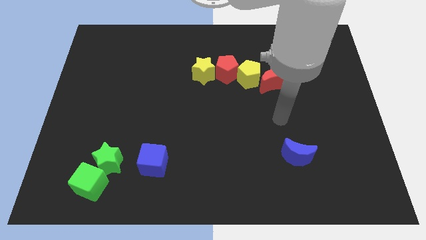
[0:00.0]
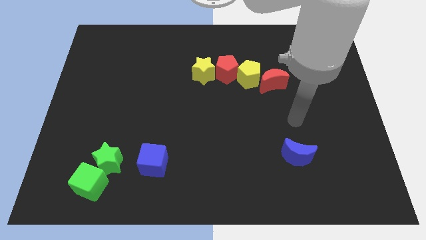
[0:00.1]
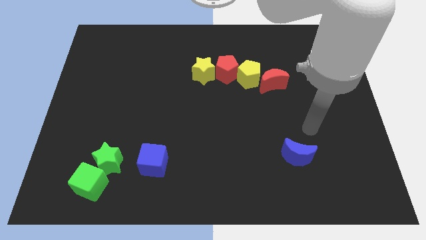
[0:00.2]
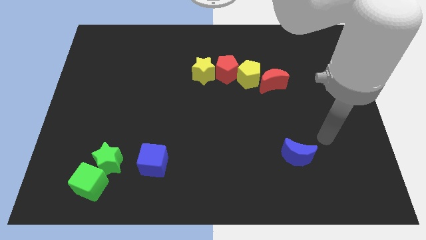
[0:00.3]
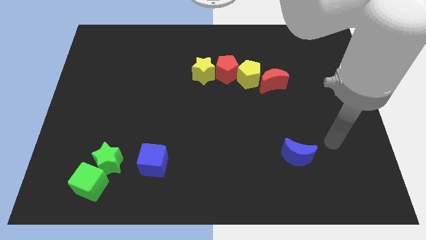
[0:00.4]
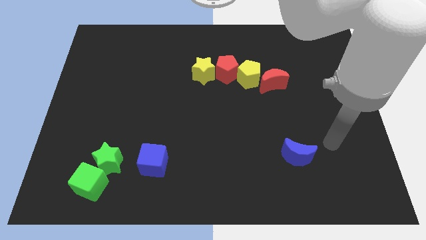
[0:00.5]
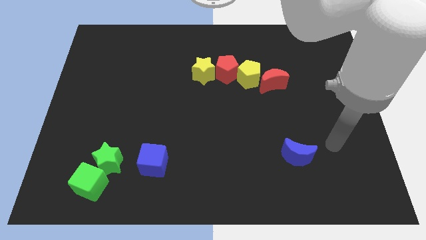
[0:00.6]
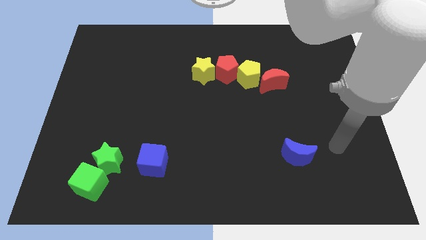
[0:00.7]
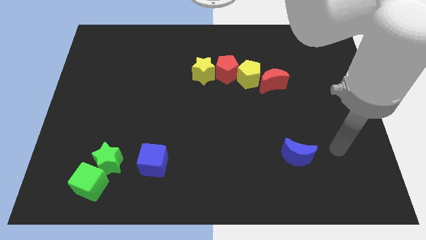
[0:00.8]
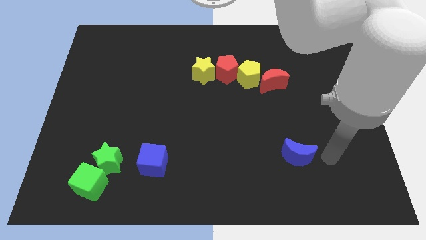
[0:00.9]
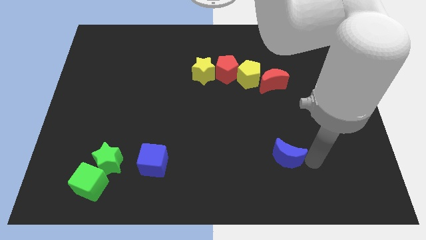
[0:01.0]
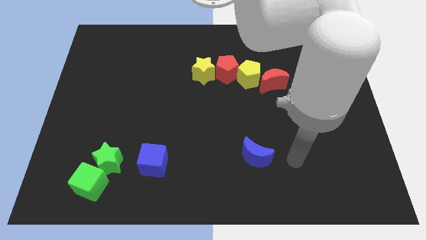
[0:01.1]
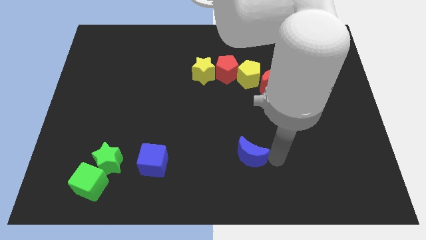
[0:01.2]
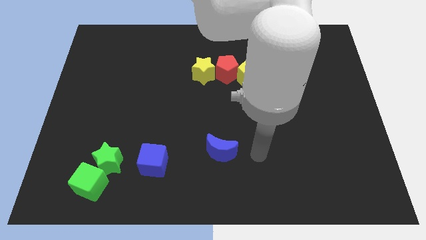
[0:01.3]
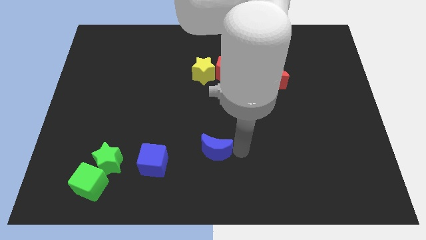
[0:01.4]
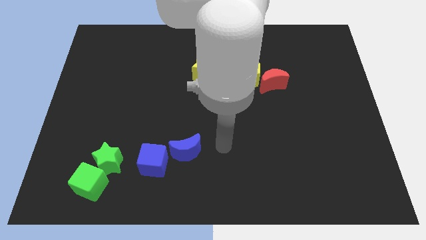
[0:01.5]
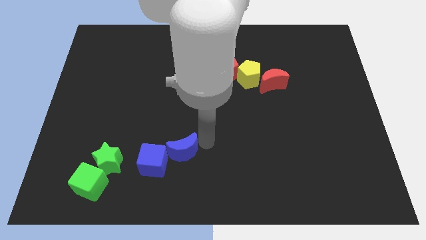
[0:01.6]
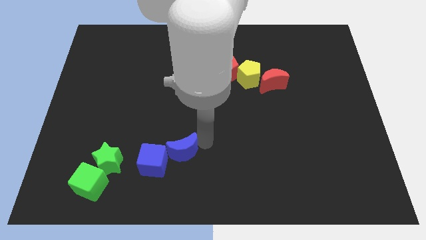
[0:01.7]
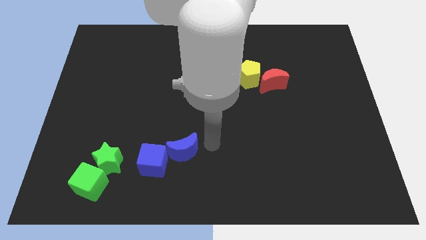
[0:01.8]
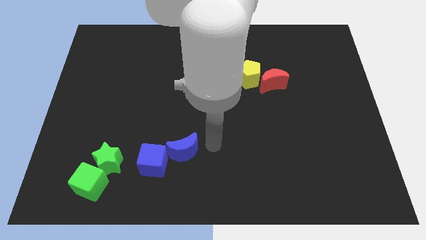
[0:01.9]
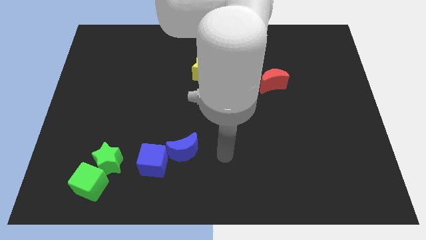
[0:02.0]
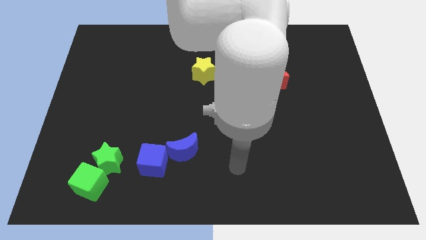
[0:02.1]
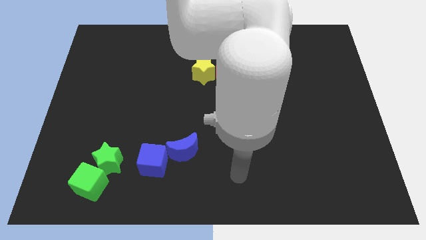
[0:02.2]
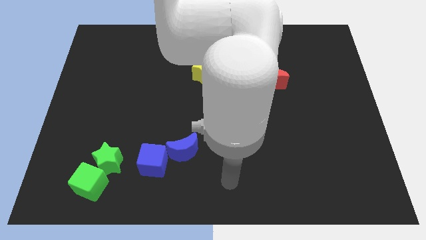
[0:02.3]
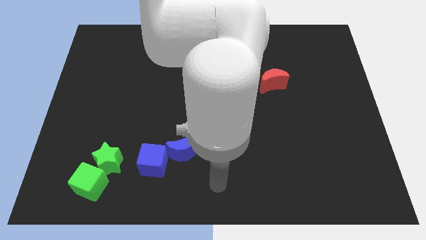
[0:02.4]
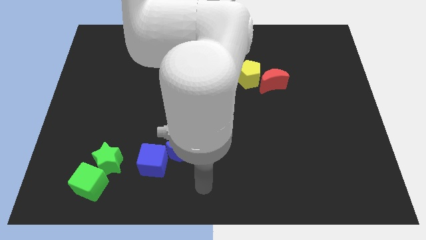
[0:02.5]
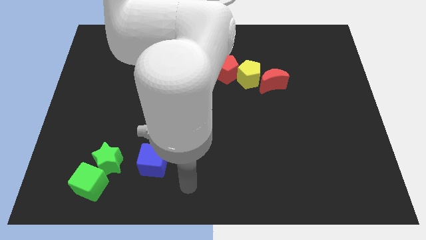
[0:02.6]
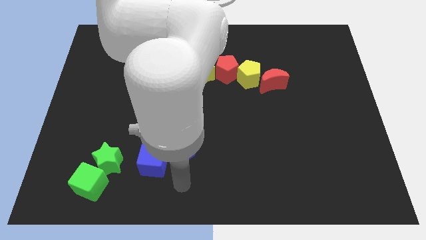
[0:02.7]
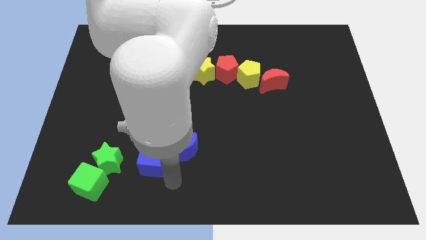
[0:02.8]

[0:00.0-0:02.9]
push the blue crescent beside to the blue cube

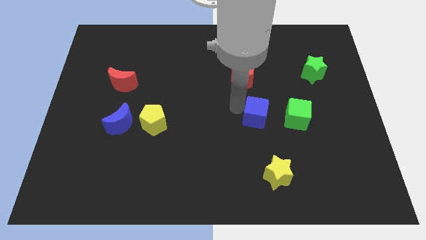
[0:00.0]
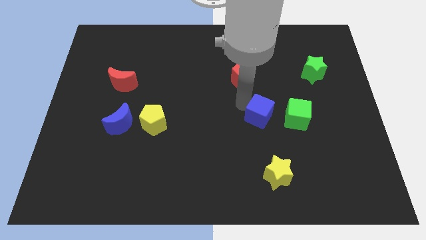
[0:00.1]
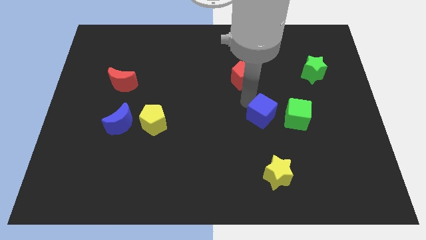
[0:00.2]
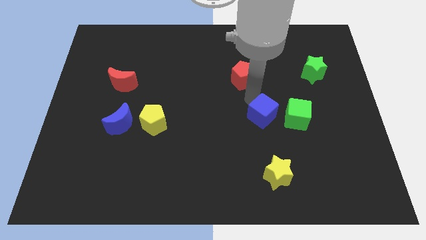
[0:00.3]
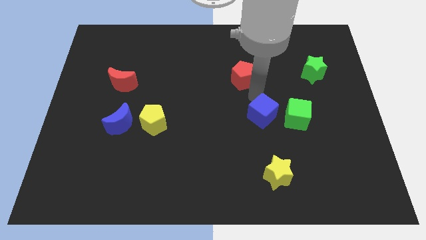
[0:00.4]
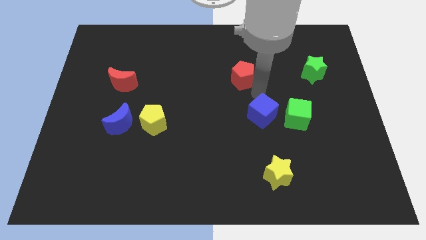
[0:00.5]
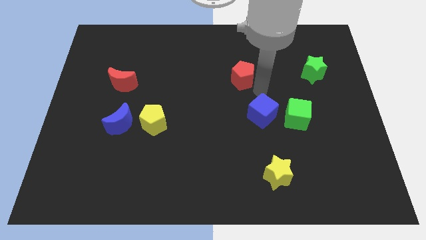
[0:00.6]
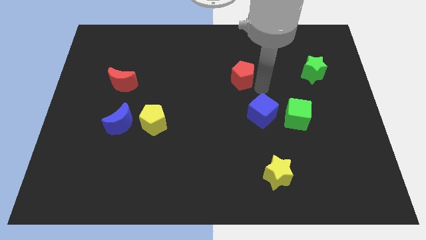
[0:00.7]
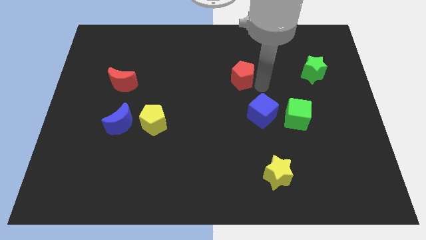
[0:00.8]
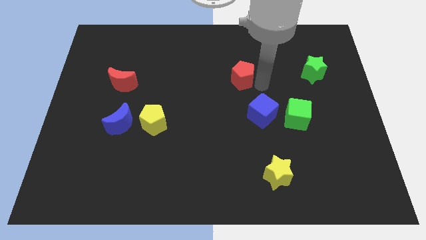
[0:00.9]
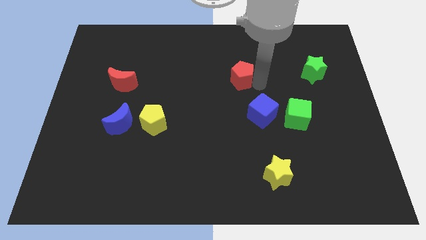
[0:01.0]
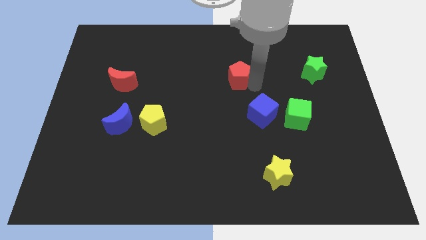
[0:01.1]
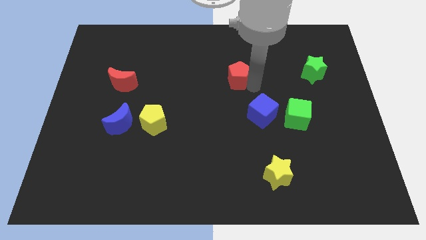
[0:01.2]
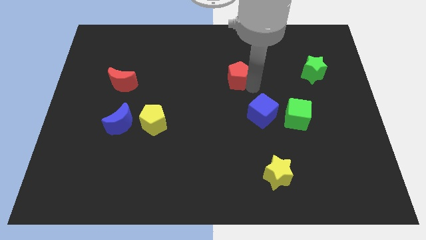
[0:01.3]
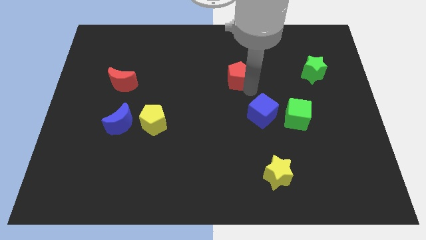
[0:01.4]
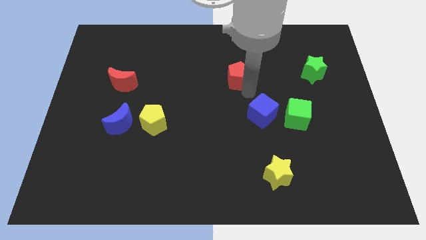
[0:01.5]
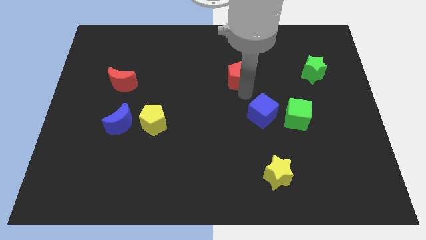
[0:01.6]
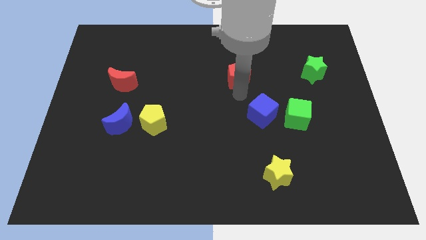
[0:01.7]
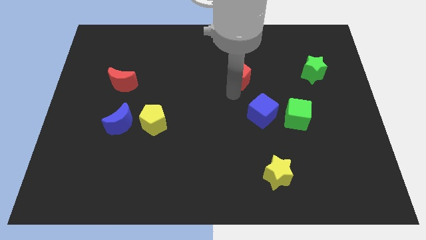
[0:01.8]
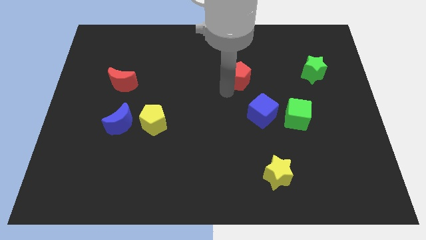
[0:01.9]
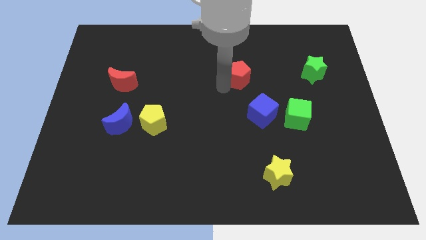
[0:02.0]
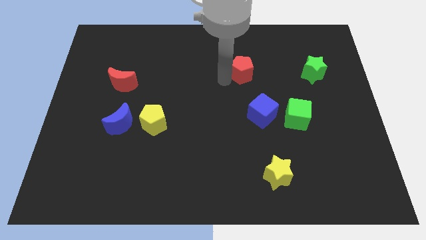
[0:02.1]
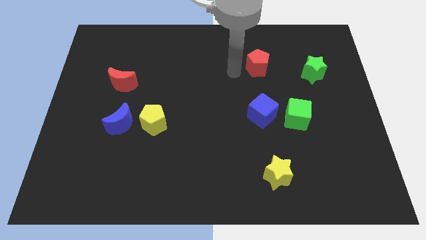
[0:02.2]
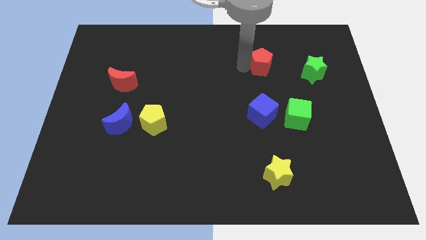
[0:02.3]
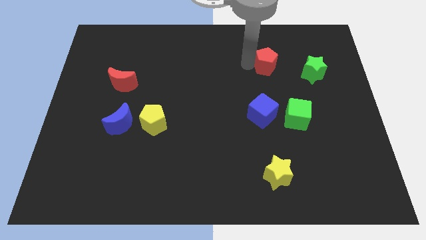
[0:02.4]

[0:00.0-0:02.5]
place red pentagon vertically above blue cube

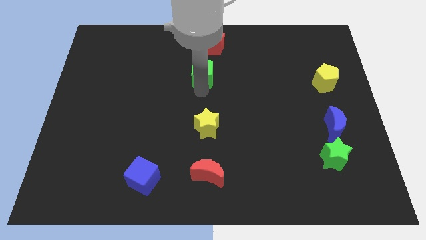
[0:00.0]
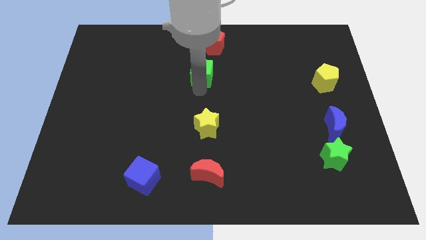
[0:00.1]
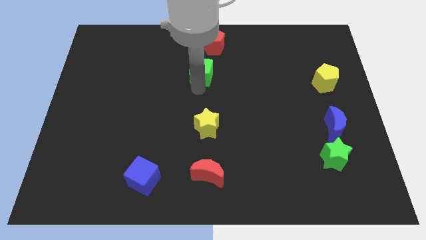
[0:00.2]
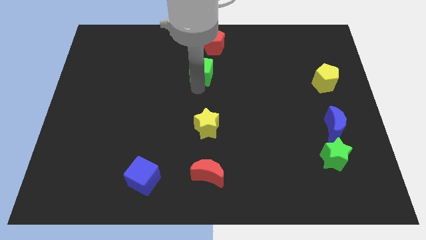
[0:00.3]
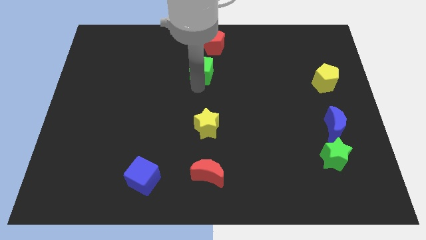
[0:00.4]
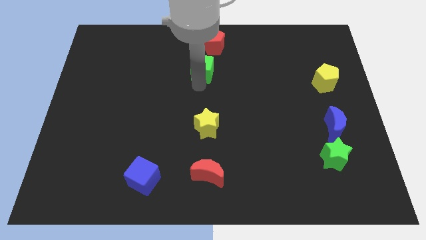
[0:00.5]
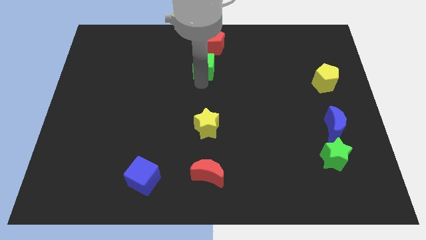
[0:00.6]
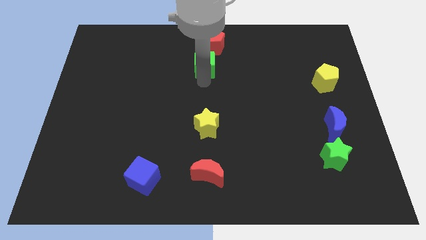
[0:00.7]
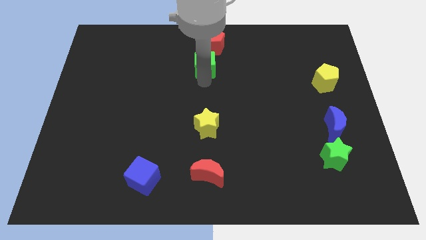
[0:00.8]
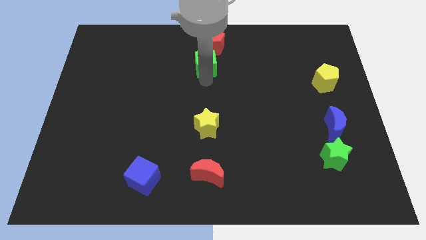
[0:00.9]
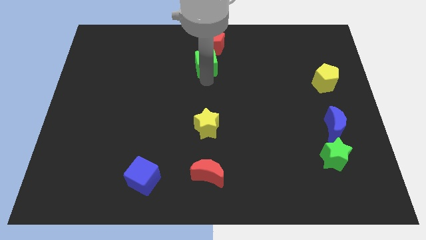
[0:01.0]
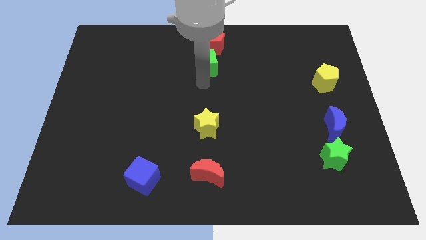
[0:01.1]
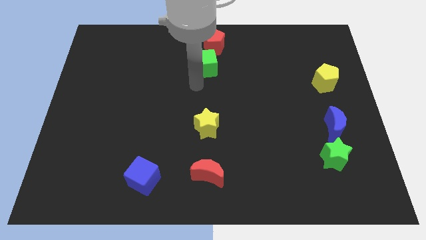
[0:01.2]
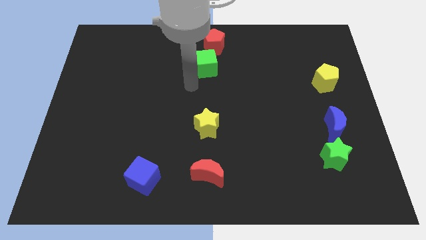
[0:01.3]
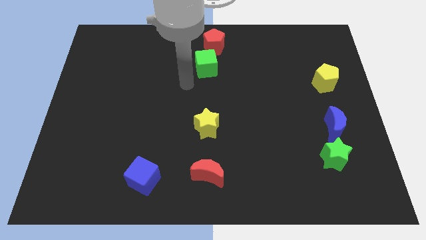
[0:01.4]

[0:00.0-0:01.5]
place the green cube below the red pentagon

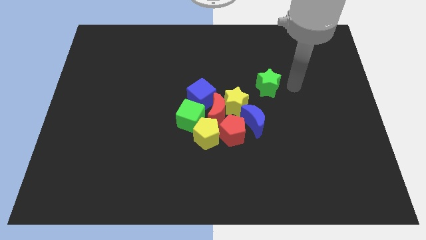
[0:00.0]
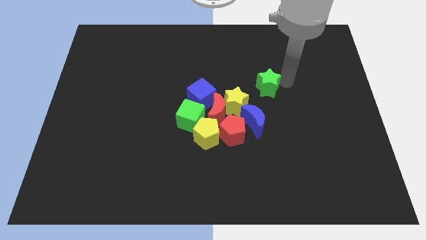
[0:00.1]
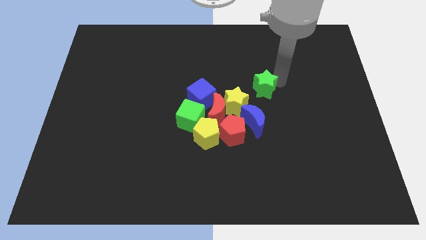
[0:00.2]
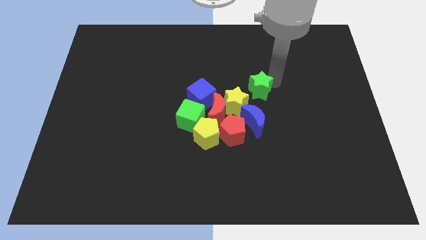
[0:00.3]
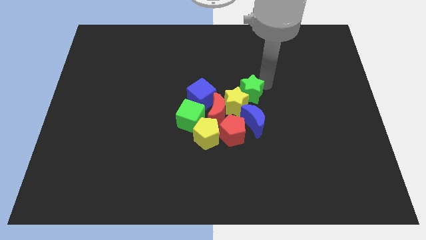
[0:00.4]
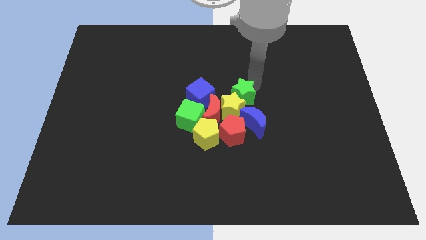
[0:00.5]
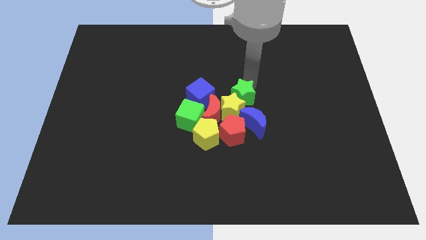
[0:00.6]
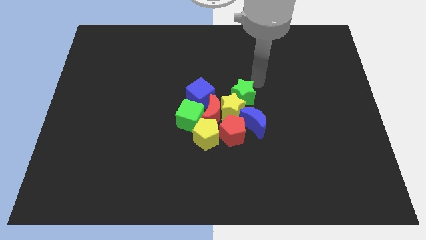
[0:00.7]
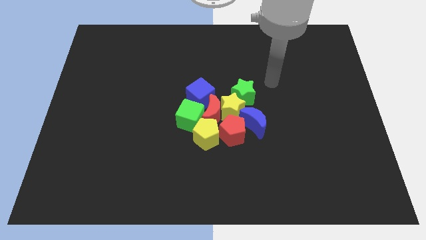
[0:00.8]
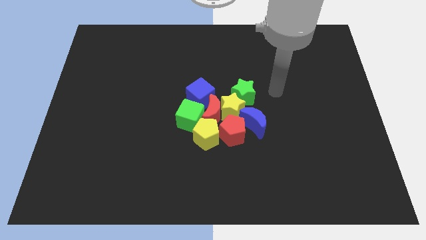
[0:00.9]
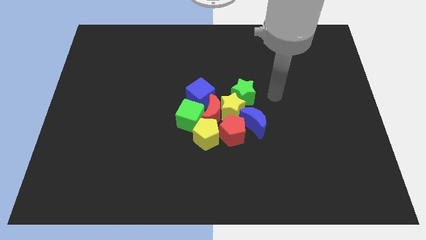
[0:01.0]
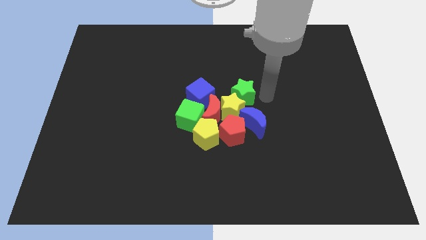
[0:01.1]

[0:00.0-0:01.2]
move the green star into the group of blocks

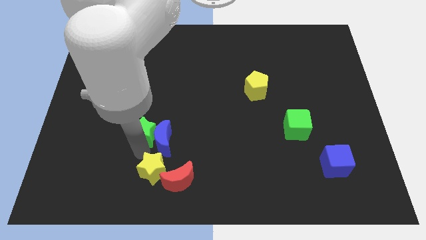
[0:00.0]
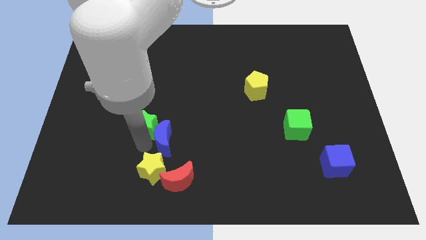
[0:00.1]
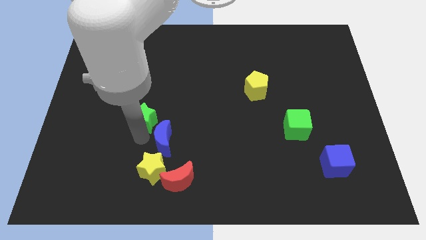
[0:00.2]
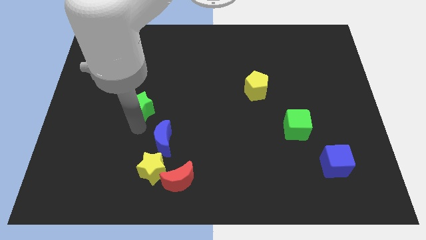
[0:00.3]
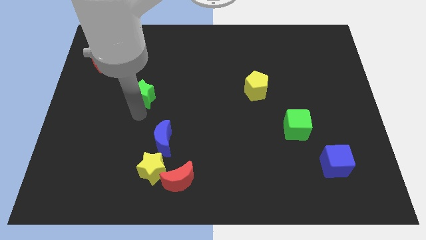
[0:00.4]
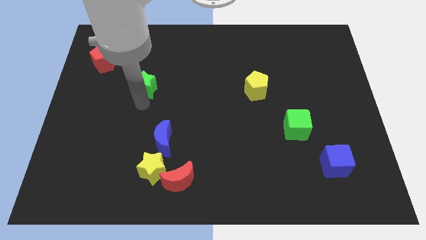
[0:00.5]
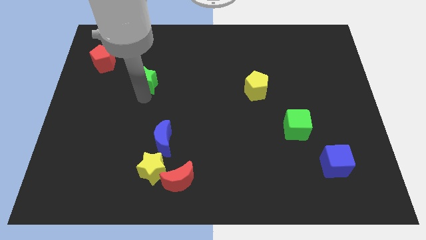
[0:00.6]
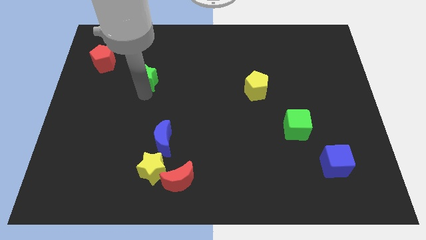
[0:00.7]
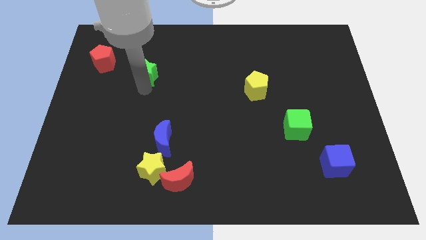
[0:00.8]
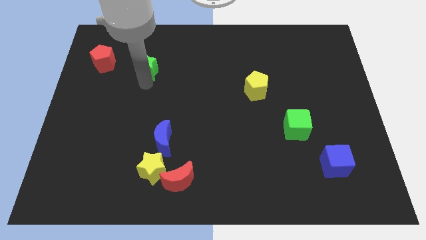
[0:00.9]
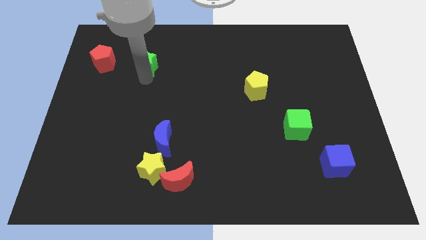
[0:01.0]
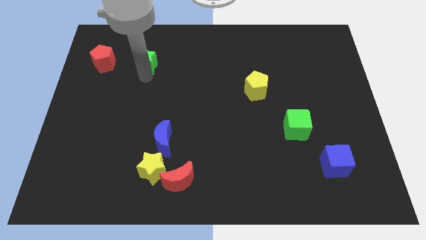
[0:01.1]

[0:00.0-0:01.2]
place green star to the right of red pentagon
